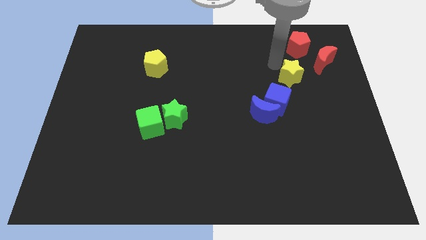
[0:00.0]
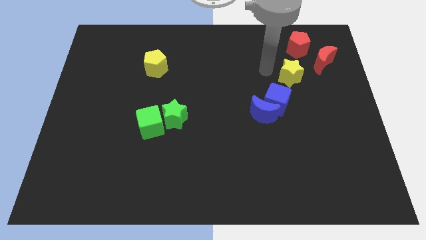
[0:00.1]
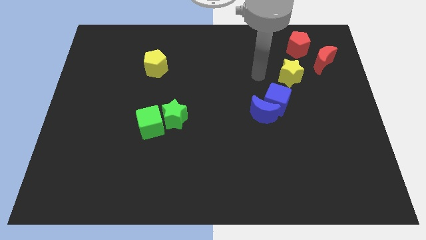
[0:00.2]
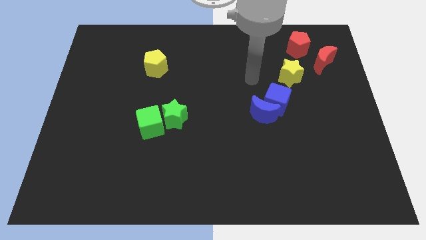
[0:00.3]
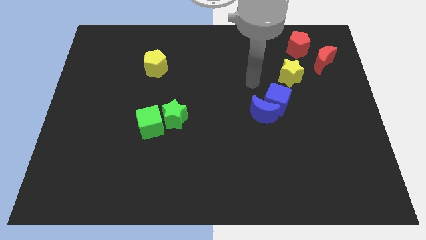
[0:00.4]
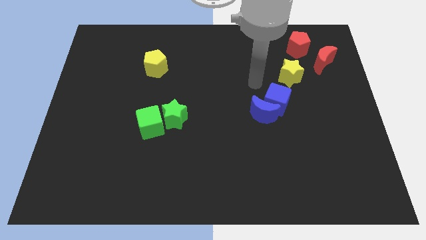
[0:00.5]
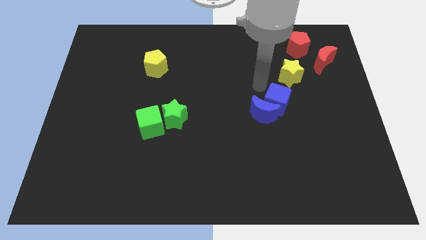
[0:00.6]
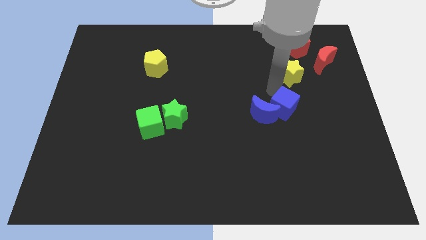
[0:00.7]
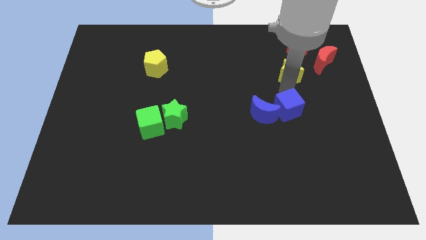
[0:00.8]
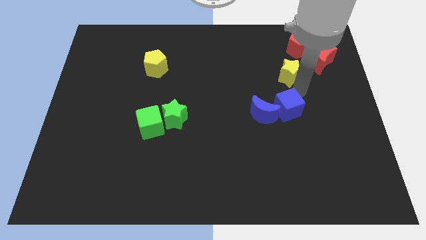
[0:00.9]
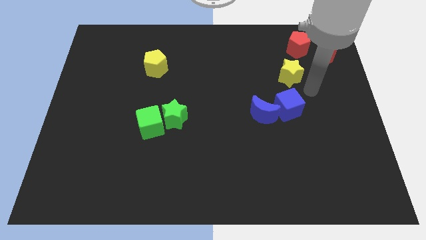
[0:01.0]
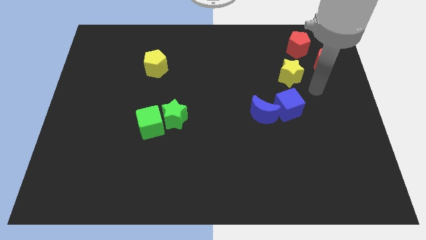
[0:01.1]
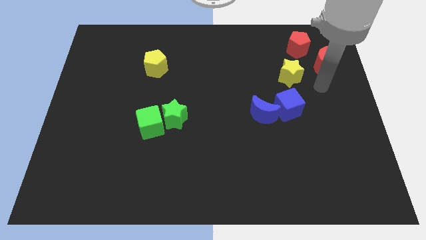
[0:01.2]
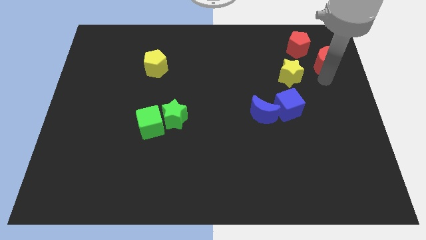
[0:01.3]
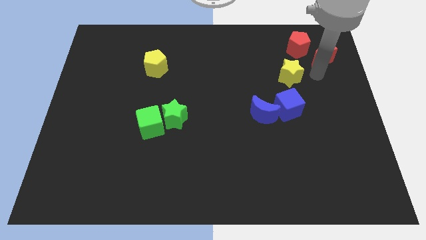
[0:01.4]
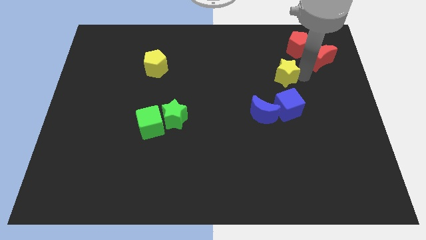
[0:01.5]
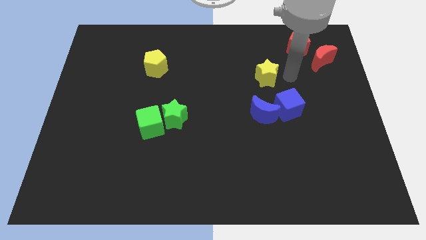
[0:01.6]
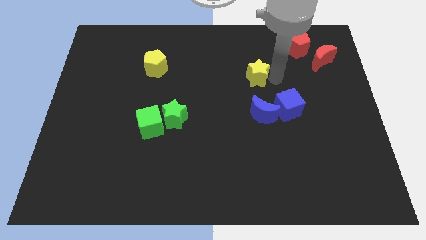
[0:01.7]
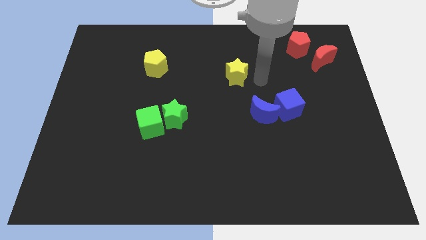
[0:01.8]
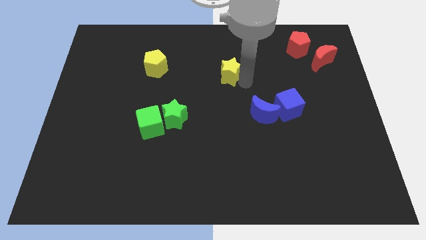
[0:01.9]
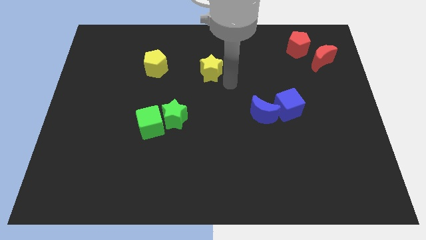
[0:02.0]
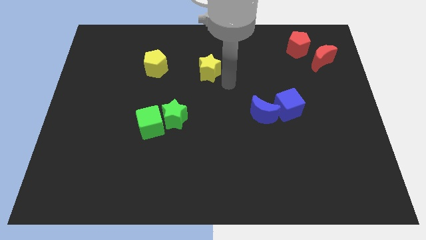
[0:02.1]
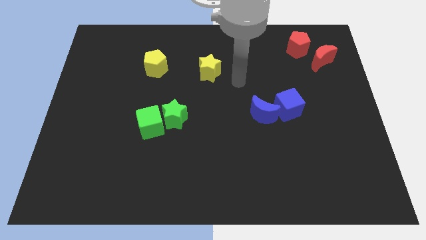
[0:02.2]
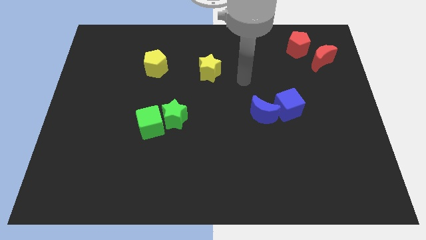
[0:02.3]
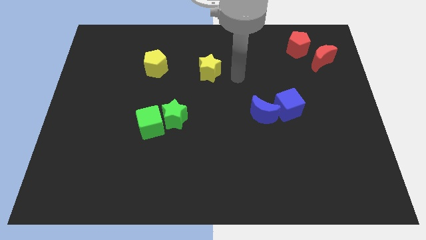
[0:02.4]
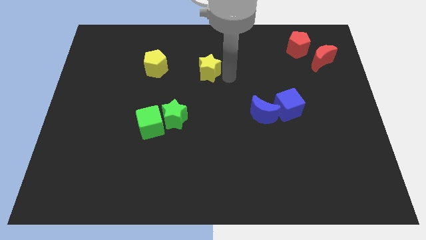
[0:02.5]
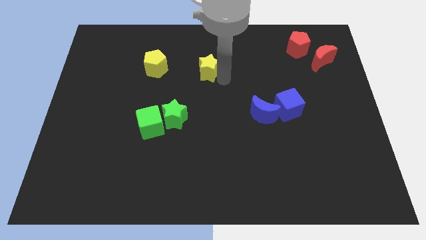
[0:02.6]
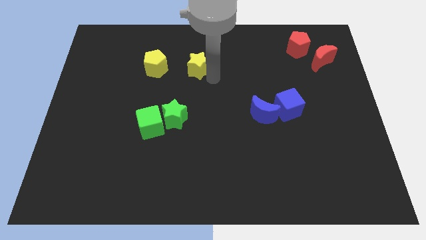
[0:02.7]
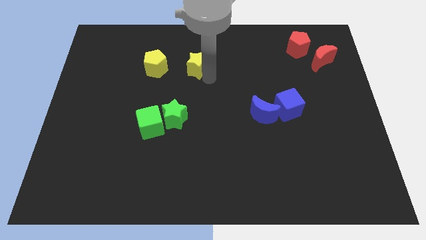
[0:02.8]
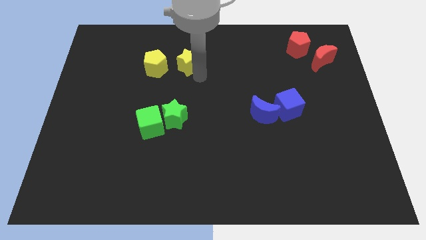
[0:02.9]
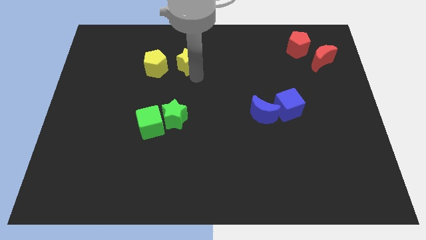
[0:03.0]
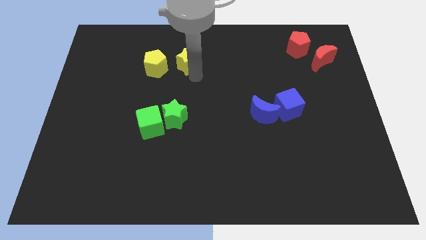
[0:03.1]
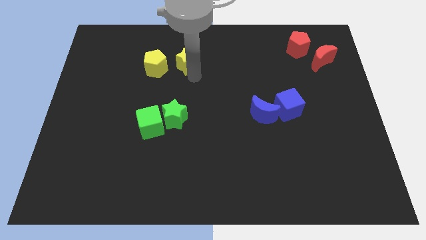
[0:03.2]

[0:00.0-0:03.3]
separate the blue cube and yellow star

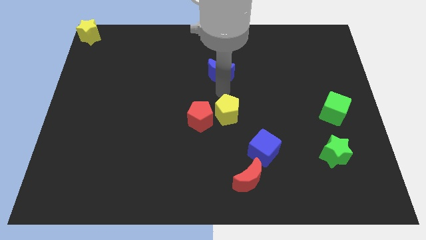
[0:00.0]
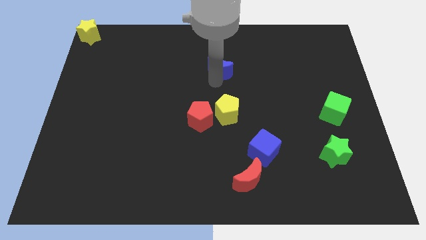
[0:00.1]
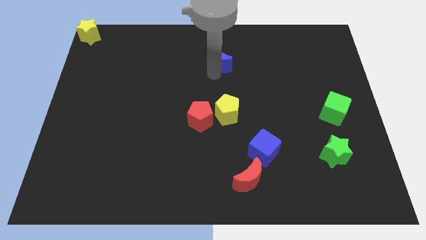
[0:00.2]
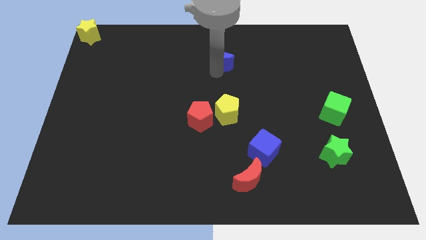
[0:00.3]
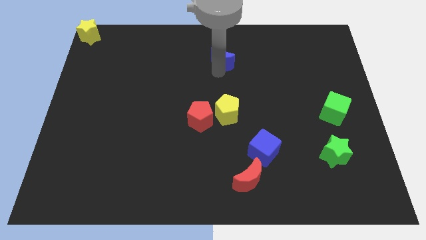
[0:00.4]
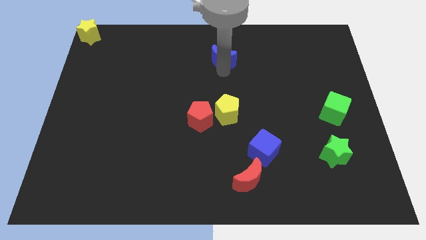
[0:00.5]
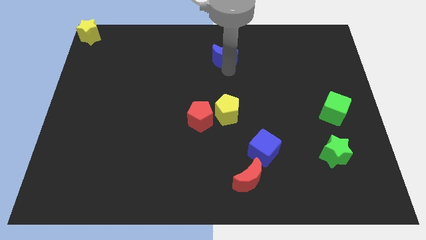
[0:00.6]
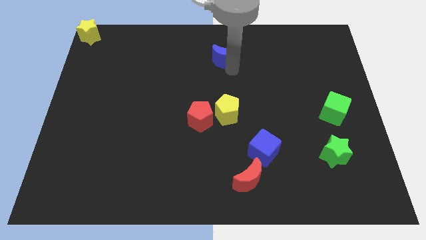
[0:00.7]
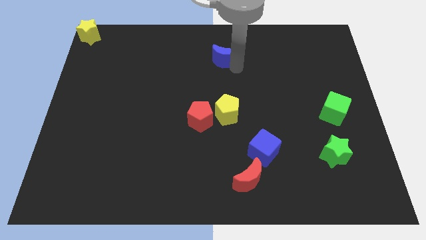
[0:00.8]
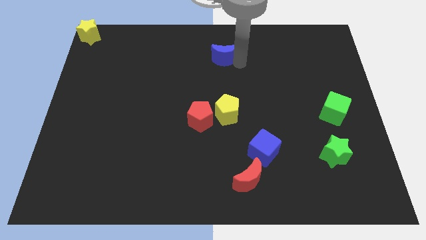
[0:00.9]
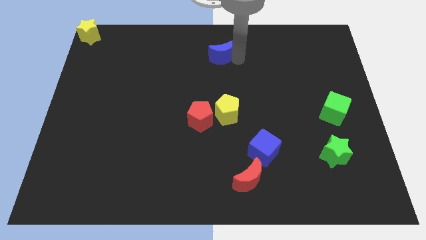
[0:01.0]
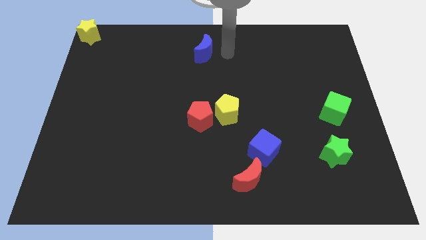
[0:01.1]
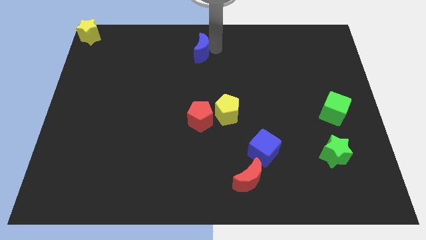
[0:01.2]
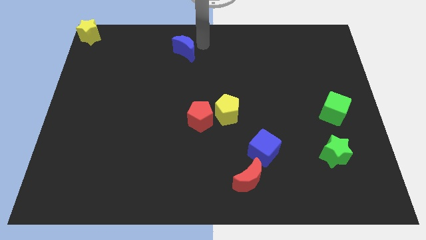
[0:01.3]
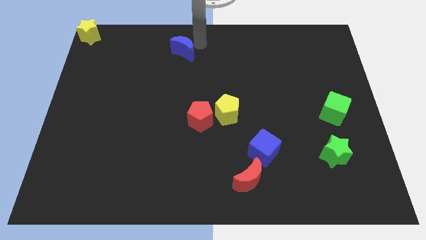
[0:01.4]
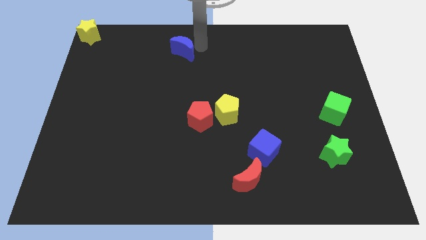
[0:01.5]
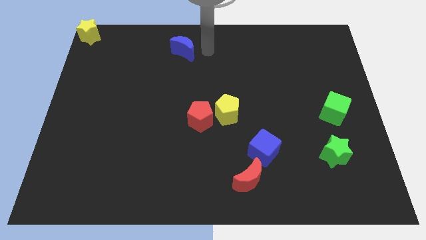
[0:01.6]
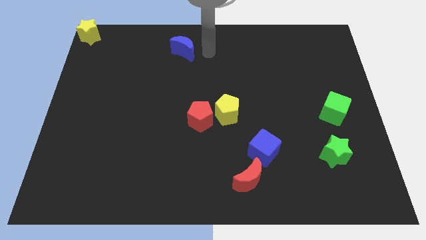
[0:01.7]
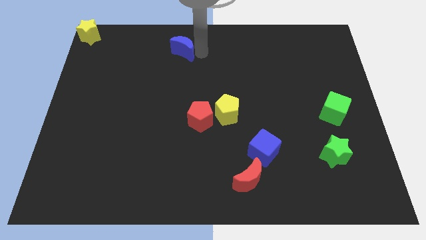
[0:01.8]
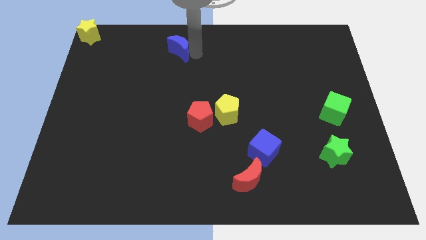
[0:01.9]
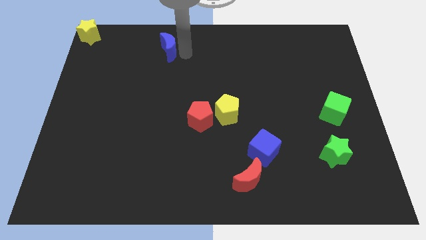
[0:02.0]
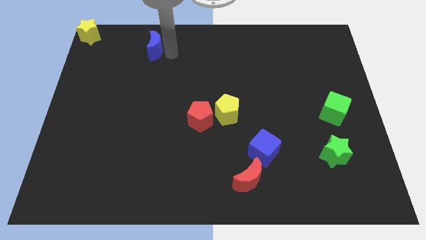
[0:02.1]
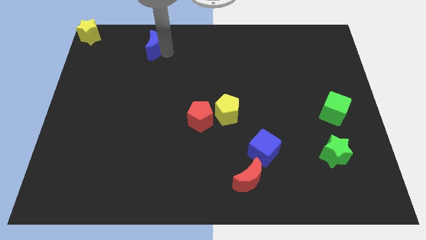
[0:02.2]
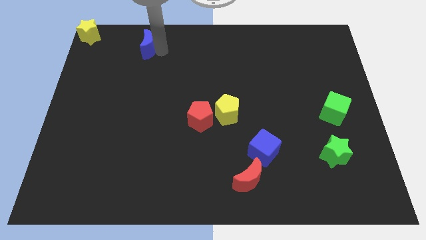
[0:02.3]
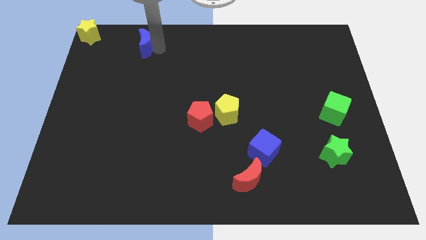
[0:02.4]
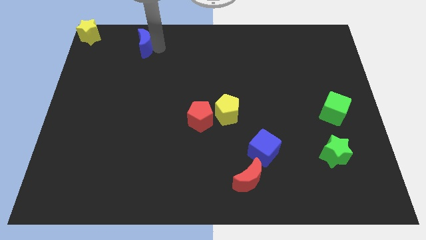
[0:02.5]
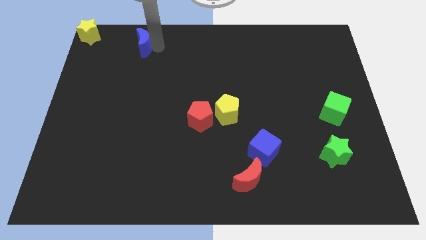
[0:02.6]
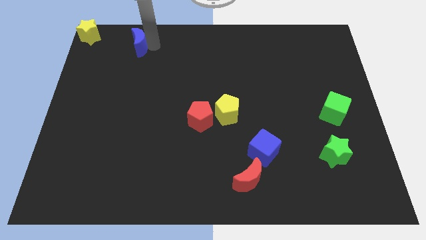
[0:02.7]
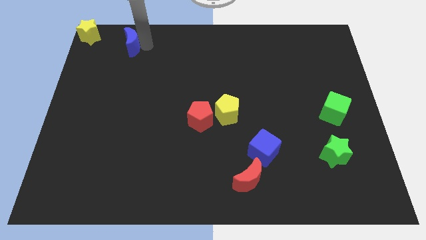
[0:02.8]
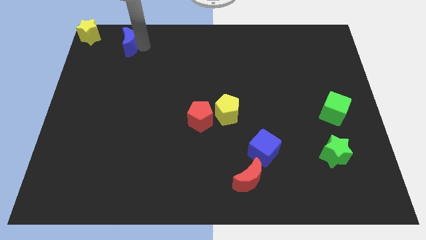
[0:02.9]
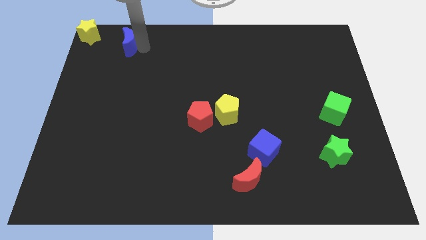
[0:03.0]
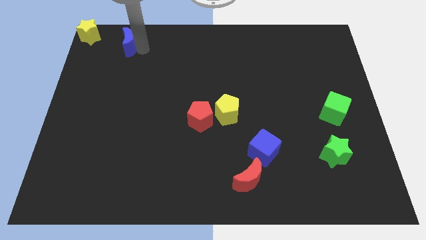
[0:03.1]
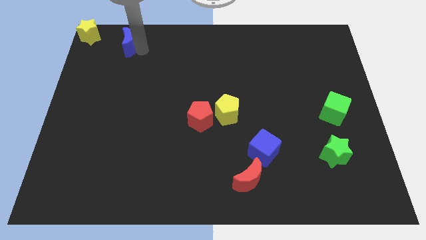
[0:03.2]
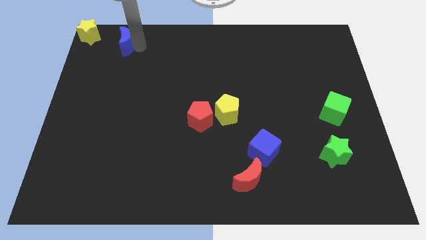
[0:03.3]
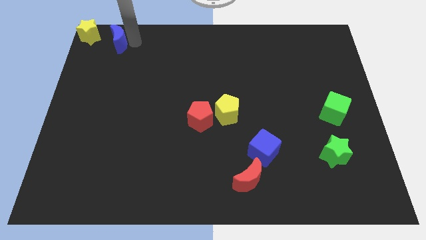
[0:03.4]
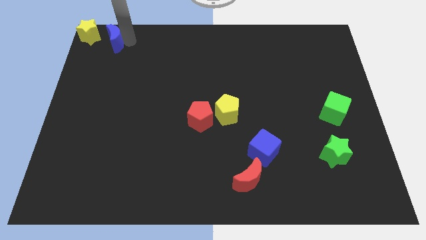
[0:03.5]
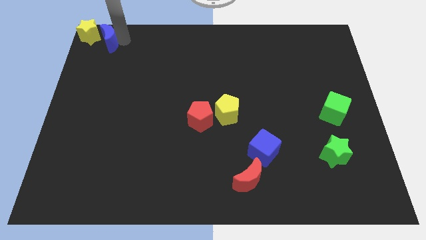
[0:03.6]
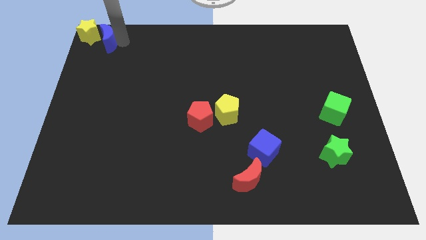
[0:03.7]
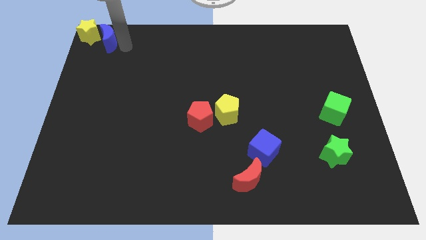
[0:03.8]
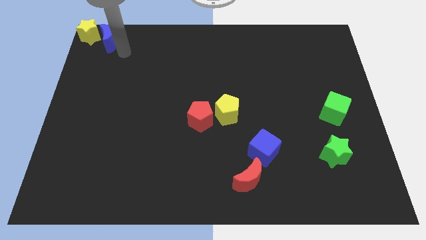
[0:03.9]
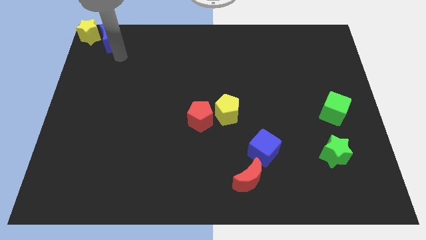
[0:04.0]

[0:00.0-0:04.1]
push blue moon towards yellow star

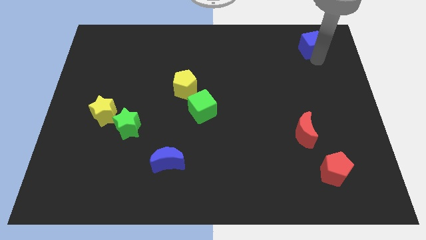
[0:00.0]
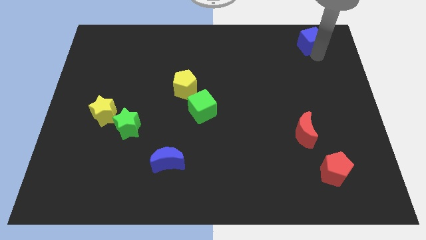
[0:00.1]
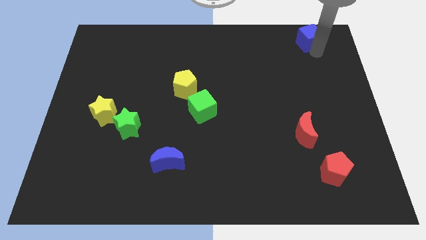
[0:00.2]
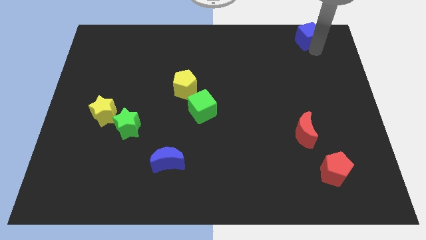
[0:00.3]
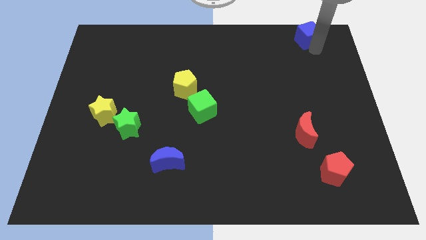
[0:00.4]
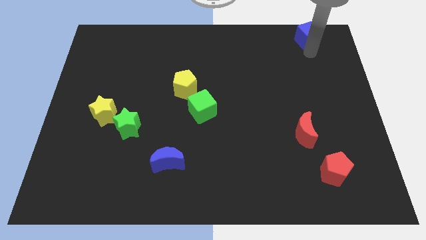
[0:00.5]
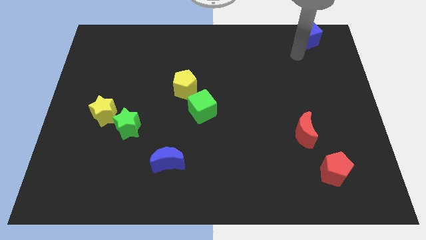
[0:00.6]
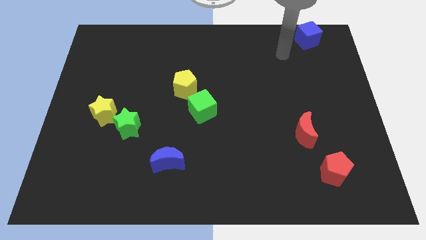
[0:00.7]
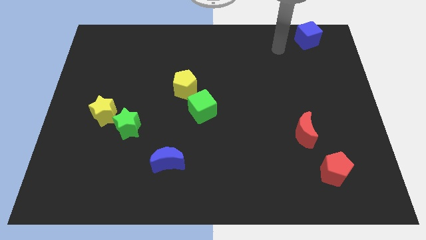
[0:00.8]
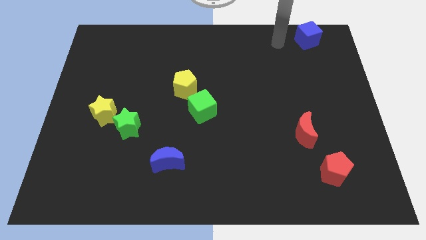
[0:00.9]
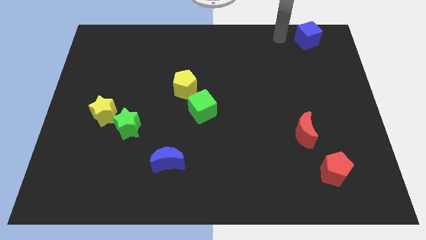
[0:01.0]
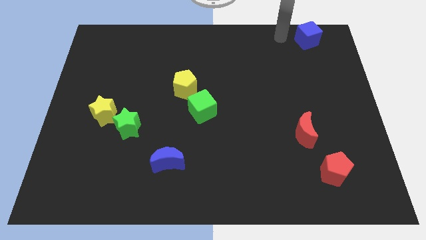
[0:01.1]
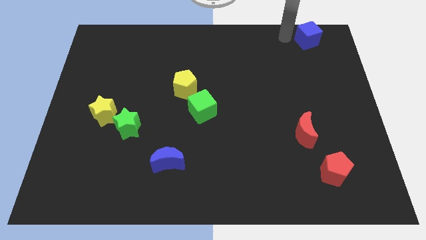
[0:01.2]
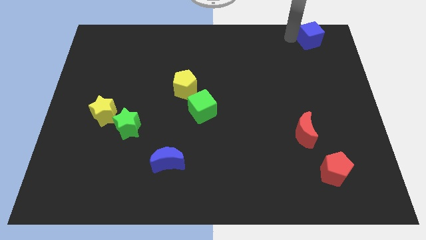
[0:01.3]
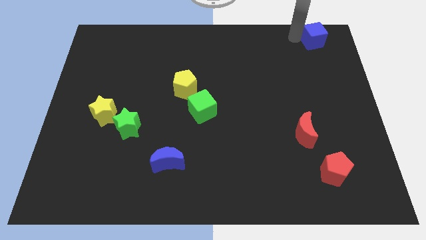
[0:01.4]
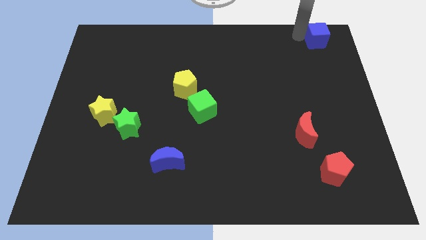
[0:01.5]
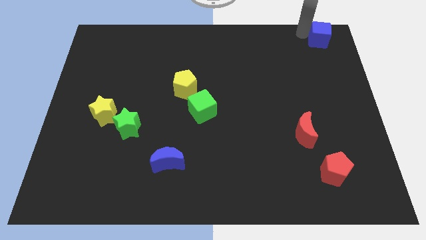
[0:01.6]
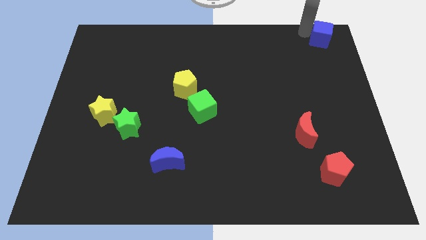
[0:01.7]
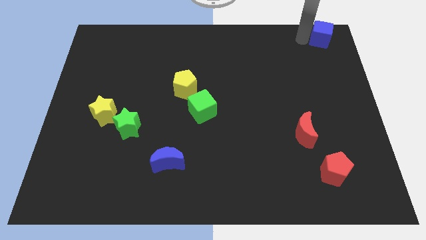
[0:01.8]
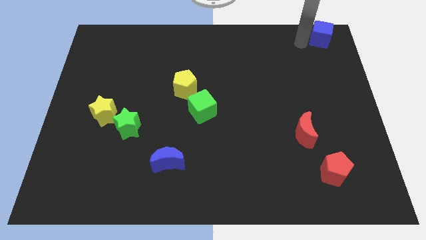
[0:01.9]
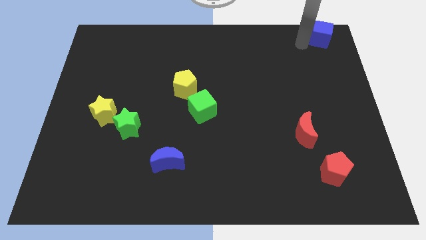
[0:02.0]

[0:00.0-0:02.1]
slide the blue cube to the top right
